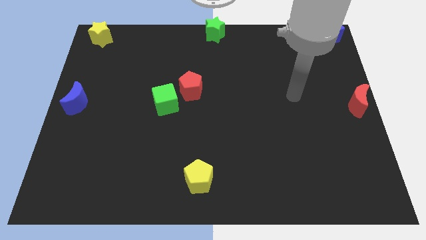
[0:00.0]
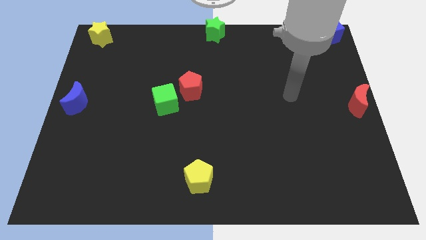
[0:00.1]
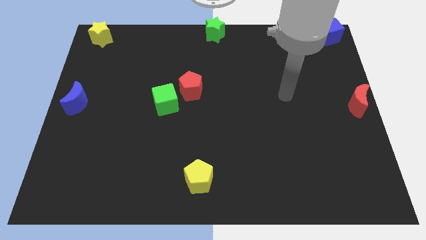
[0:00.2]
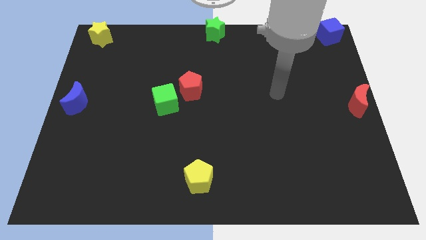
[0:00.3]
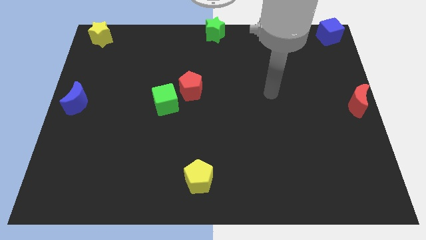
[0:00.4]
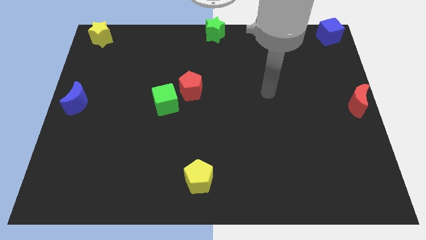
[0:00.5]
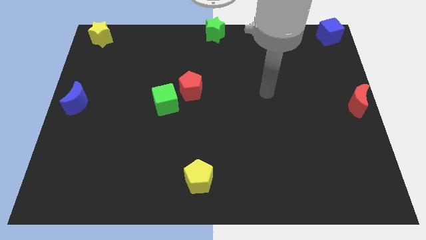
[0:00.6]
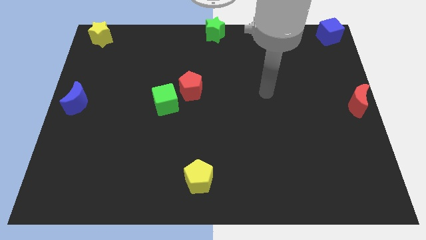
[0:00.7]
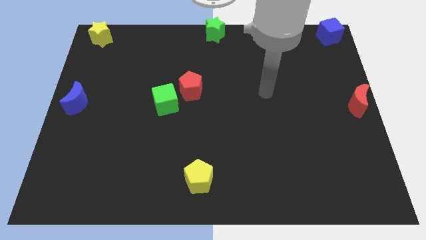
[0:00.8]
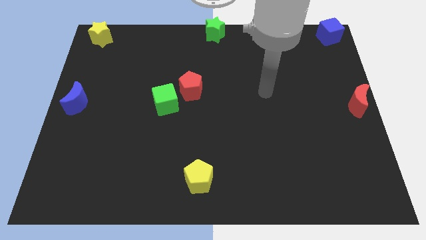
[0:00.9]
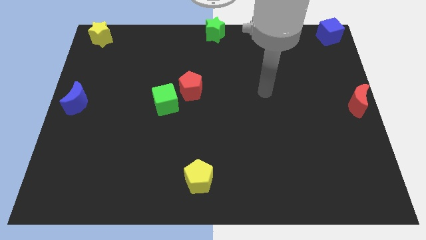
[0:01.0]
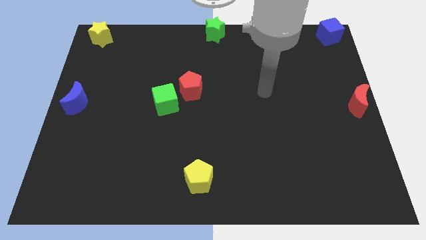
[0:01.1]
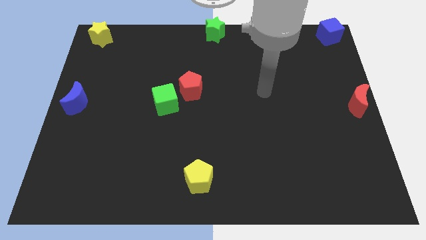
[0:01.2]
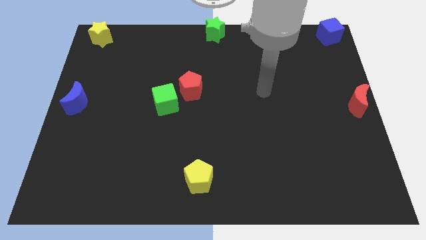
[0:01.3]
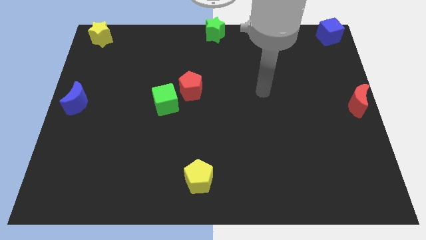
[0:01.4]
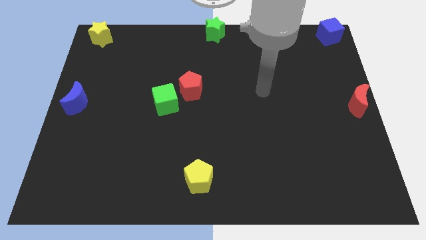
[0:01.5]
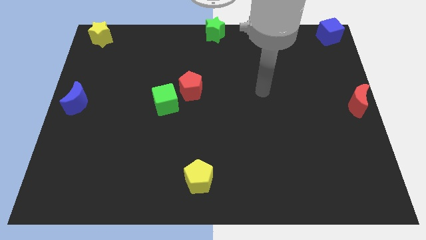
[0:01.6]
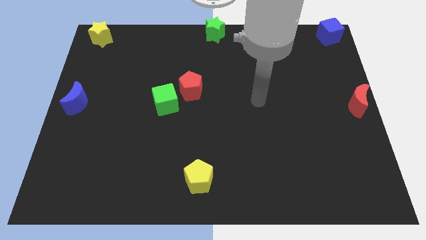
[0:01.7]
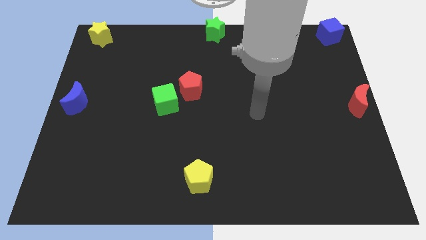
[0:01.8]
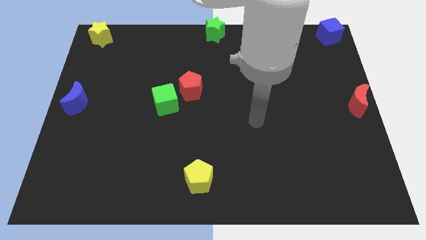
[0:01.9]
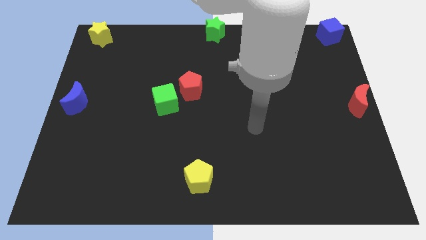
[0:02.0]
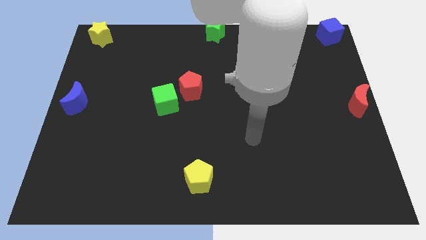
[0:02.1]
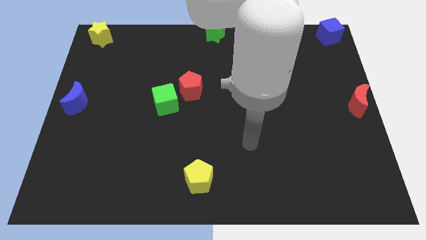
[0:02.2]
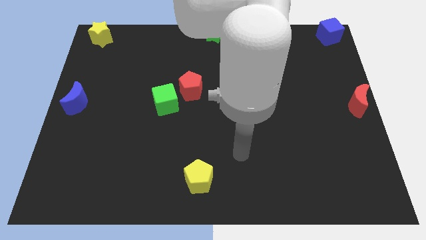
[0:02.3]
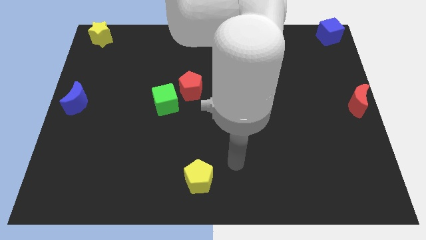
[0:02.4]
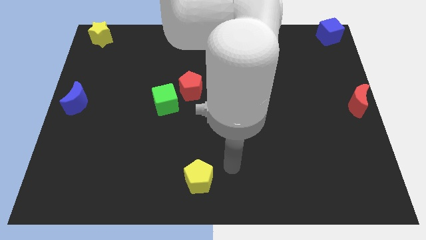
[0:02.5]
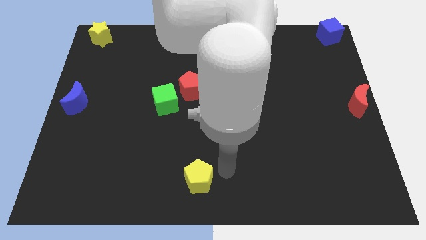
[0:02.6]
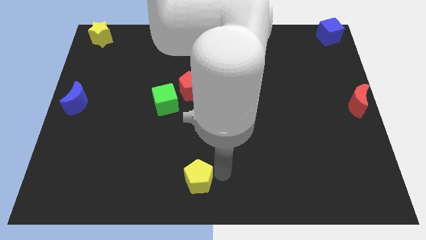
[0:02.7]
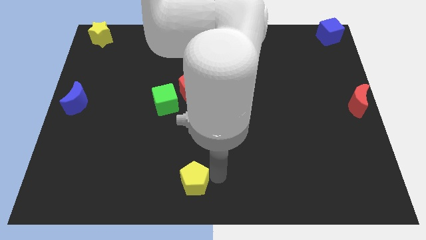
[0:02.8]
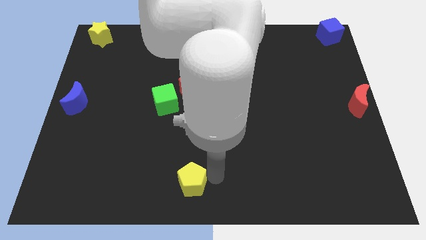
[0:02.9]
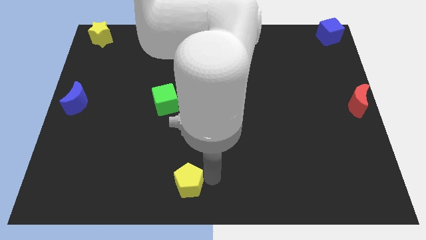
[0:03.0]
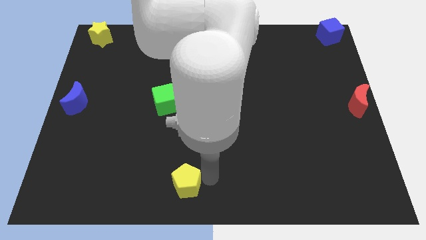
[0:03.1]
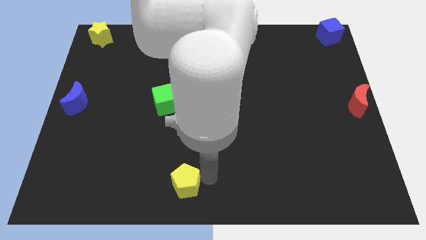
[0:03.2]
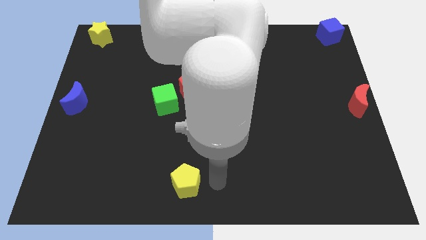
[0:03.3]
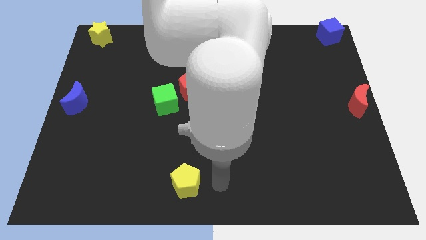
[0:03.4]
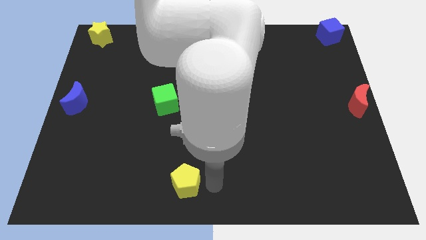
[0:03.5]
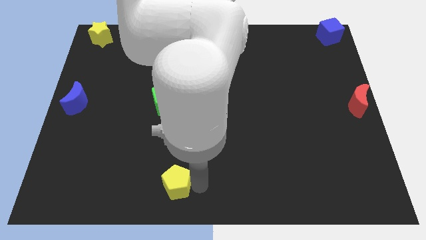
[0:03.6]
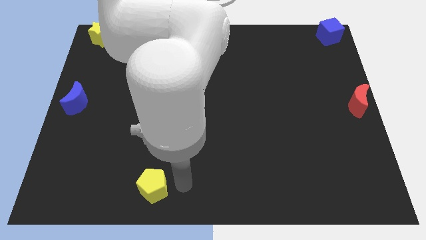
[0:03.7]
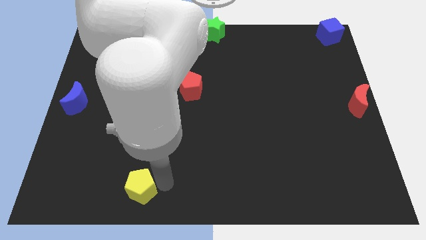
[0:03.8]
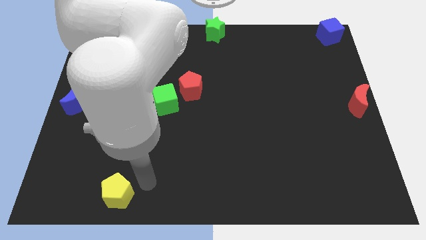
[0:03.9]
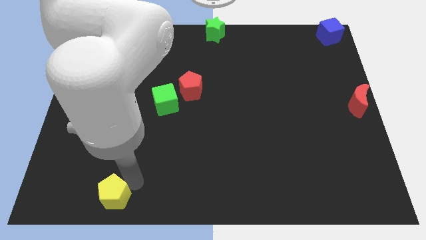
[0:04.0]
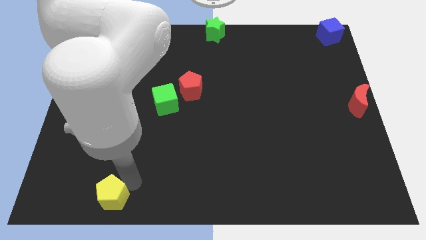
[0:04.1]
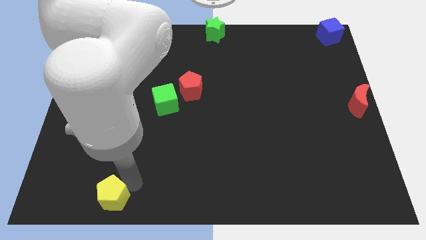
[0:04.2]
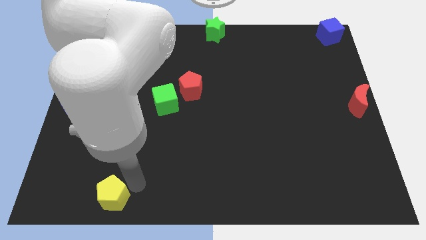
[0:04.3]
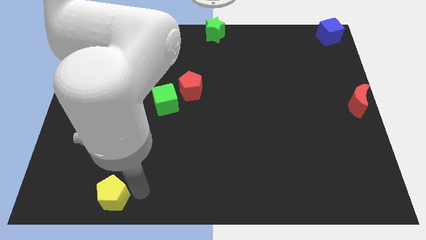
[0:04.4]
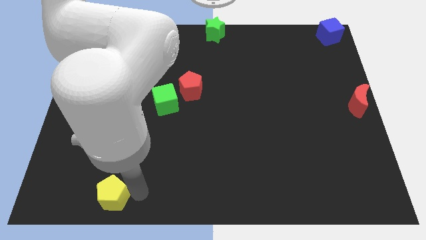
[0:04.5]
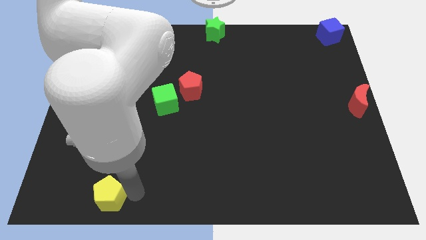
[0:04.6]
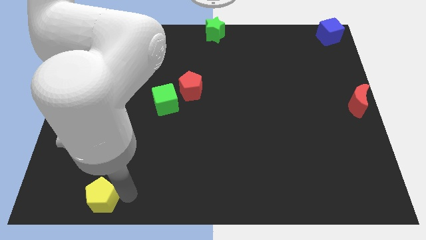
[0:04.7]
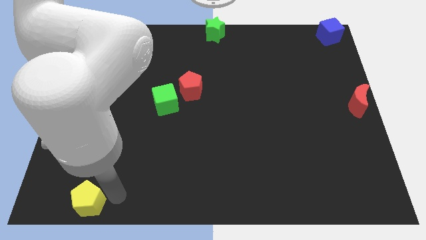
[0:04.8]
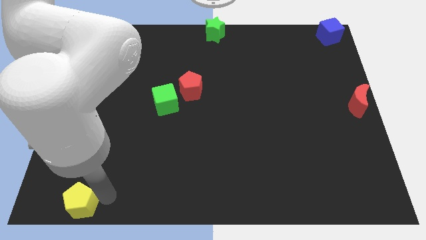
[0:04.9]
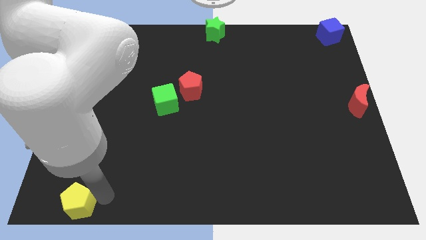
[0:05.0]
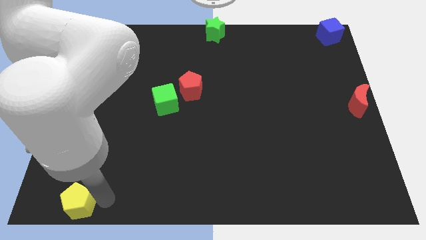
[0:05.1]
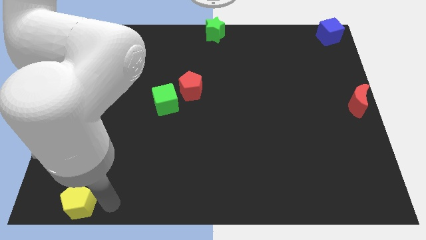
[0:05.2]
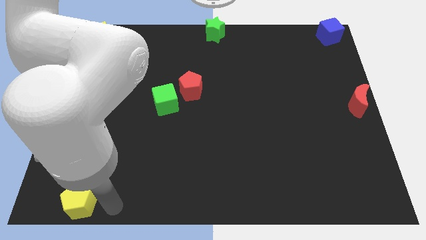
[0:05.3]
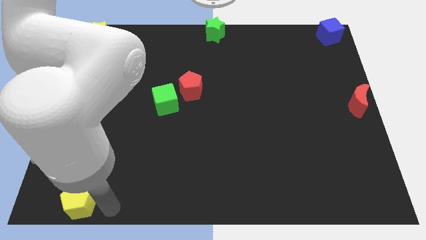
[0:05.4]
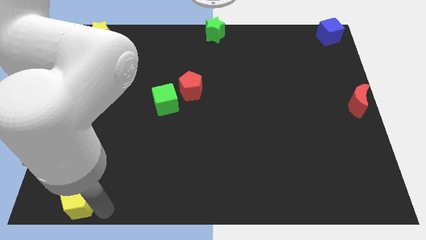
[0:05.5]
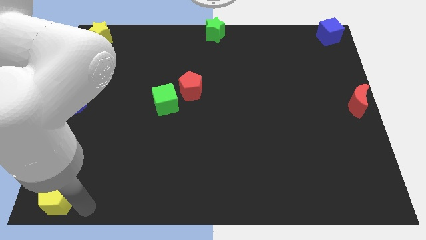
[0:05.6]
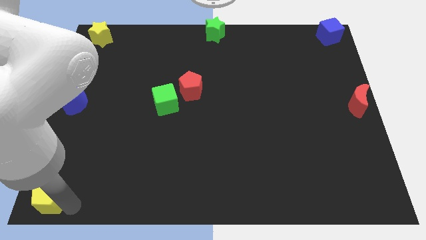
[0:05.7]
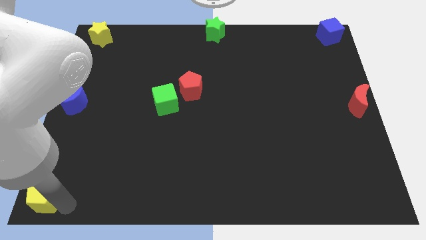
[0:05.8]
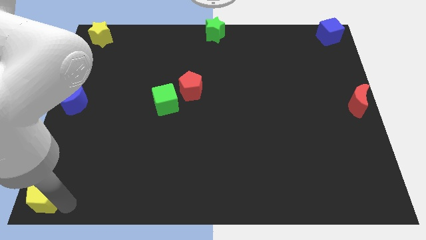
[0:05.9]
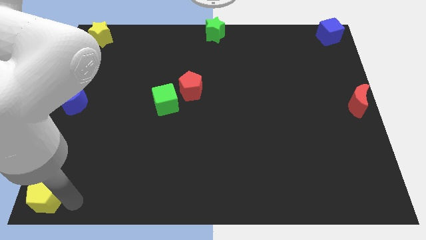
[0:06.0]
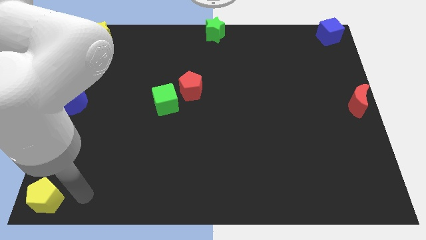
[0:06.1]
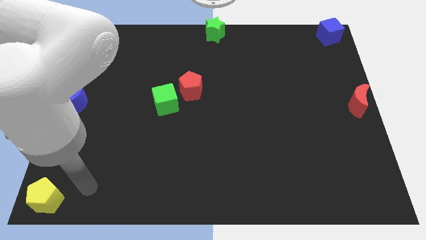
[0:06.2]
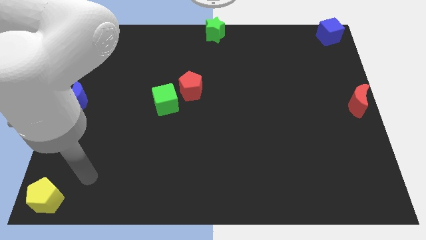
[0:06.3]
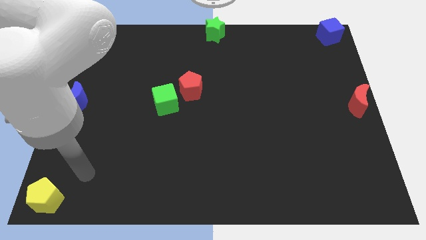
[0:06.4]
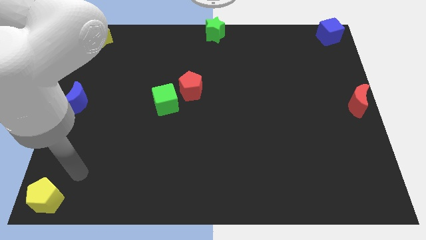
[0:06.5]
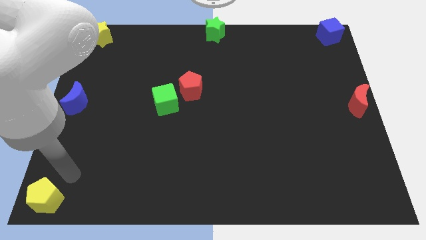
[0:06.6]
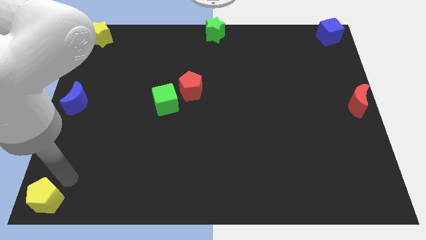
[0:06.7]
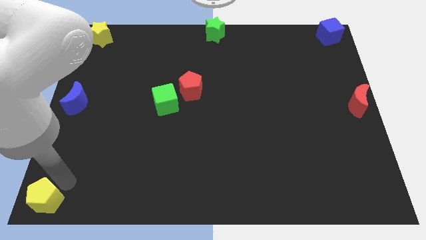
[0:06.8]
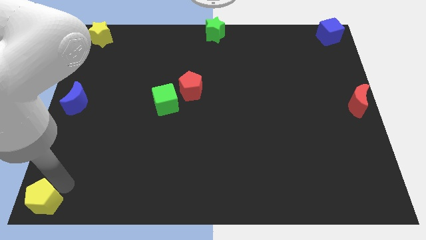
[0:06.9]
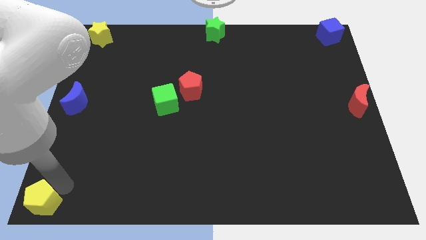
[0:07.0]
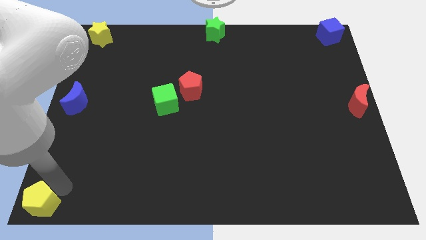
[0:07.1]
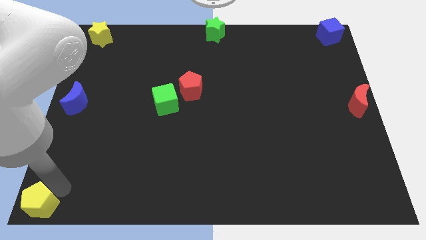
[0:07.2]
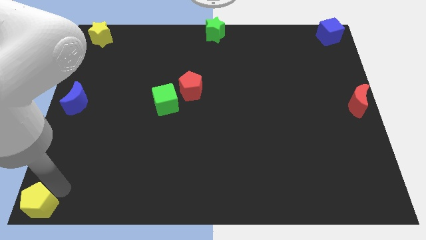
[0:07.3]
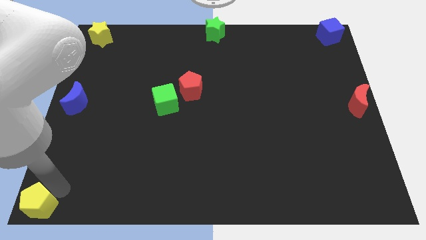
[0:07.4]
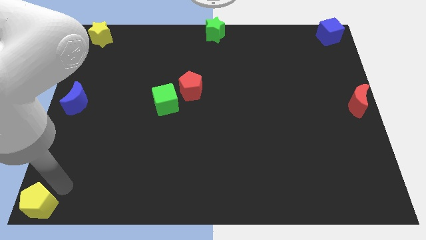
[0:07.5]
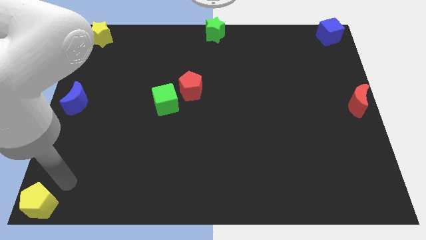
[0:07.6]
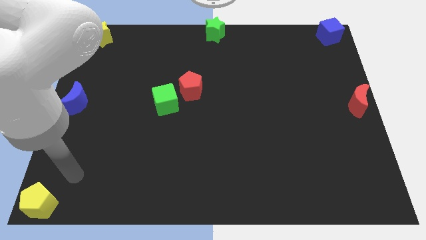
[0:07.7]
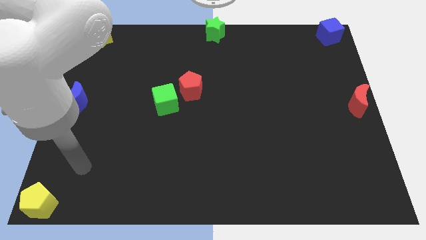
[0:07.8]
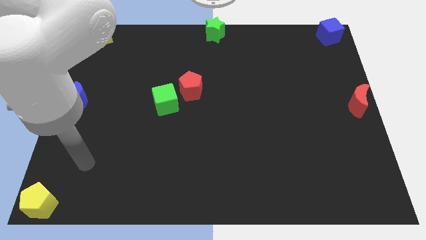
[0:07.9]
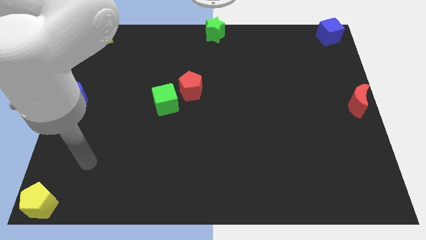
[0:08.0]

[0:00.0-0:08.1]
move yellow pentagon bottom left

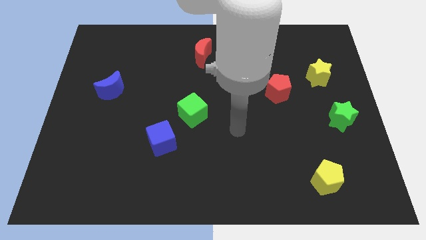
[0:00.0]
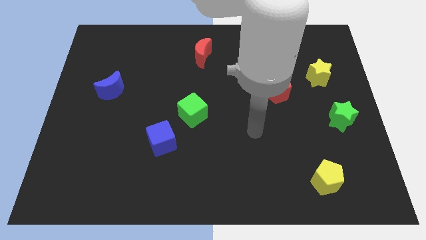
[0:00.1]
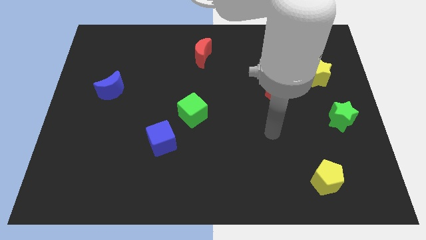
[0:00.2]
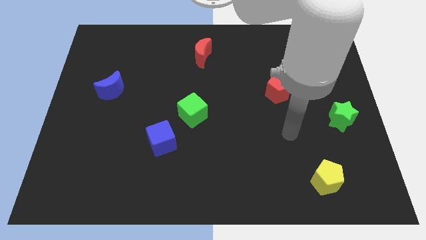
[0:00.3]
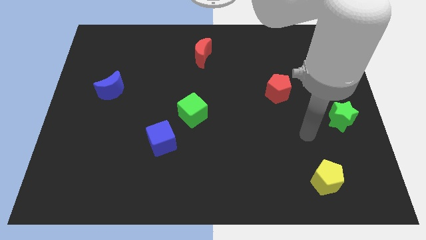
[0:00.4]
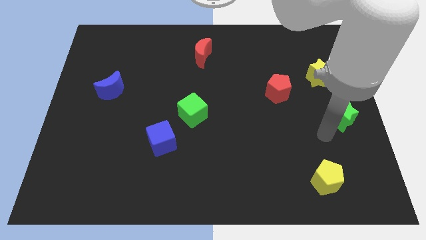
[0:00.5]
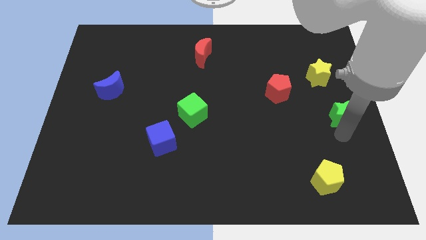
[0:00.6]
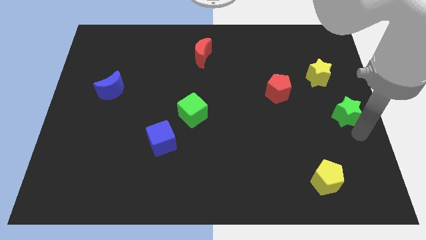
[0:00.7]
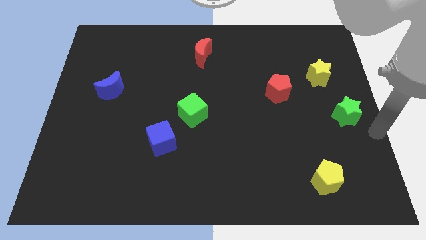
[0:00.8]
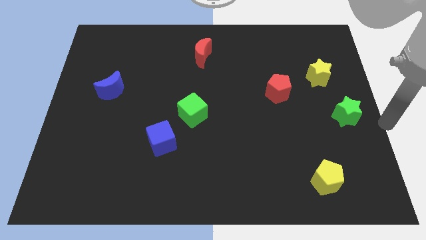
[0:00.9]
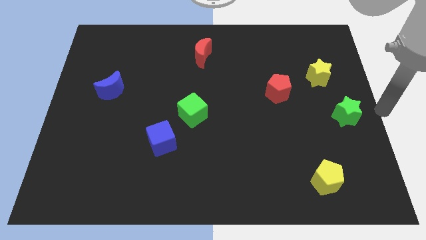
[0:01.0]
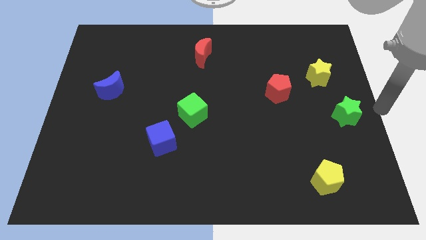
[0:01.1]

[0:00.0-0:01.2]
move your arm to the right center
